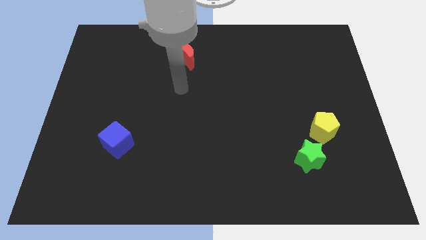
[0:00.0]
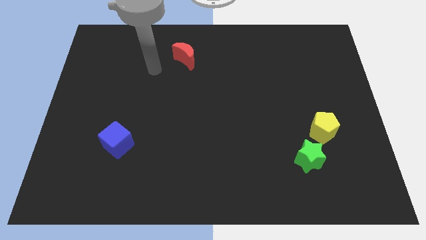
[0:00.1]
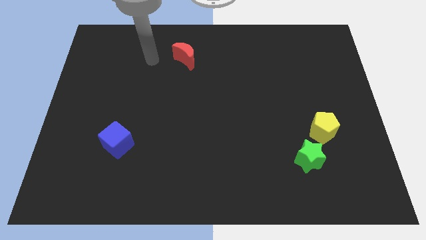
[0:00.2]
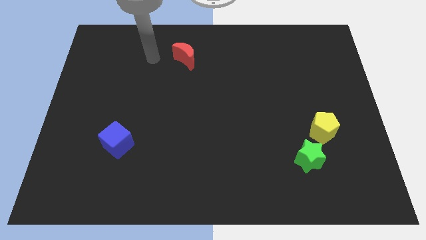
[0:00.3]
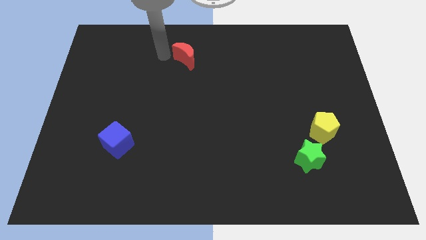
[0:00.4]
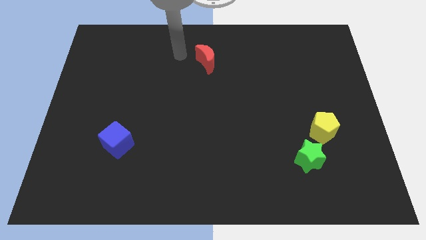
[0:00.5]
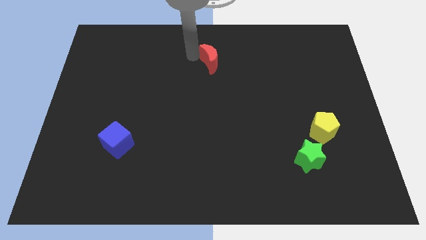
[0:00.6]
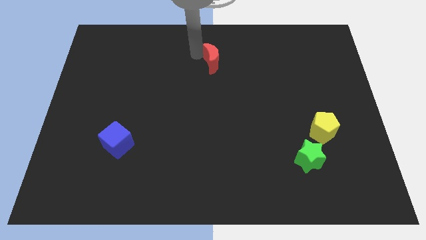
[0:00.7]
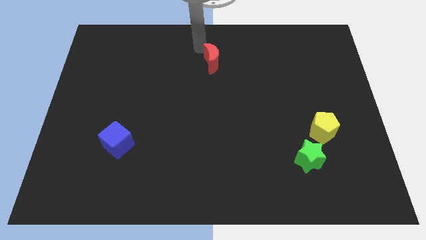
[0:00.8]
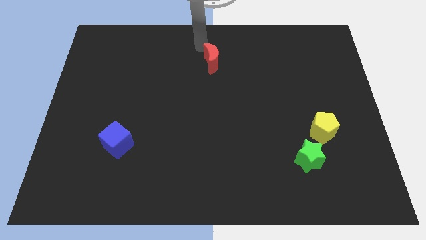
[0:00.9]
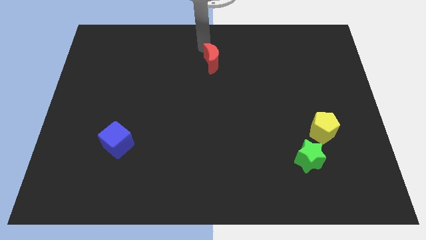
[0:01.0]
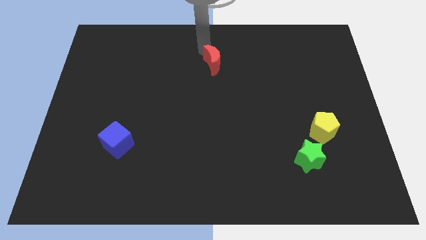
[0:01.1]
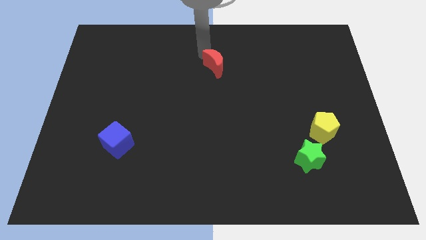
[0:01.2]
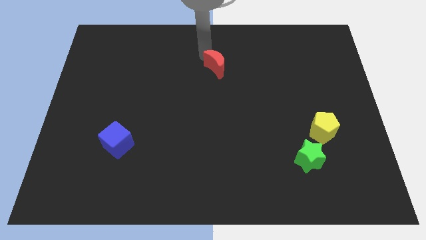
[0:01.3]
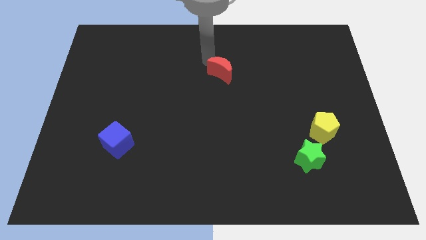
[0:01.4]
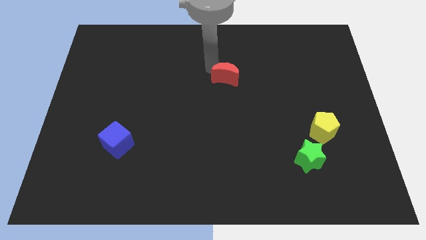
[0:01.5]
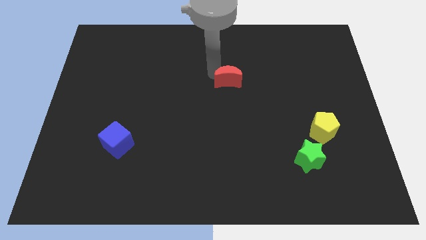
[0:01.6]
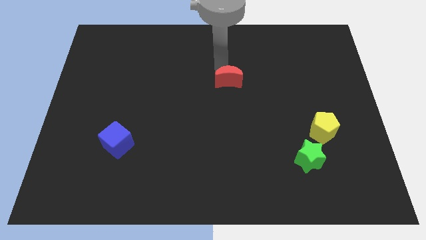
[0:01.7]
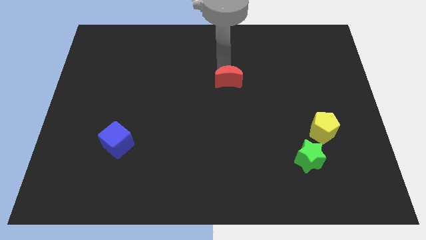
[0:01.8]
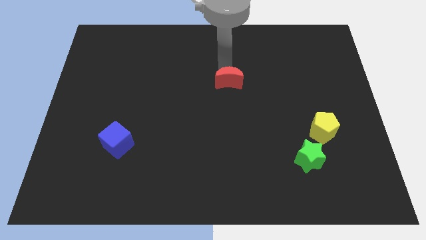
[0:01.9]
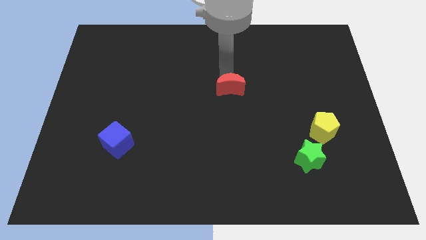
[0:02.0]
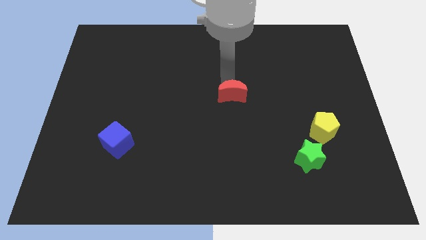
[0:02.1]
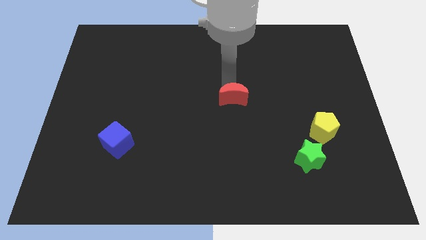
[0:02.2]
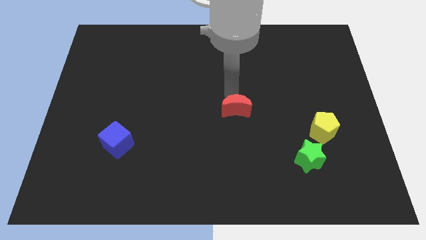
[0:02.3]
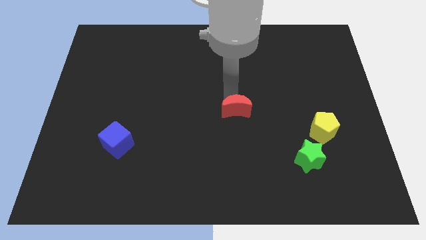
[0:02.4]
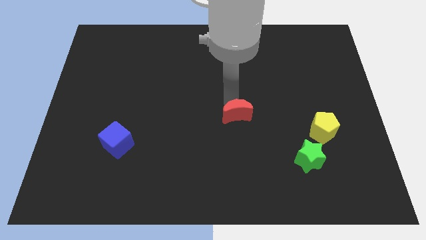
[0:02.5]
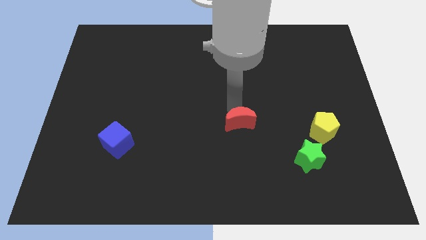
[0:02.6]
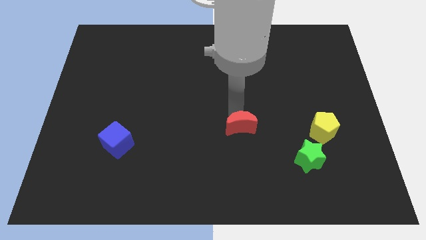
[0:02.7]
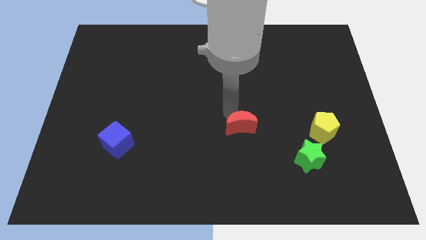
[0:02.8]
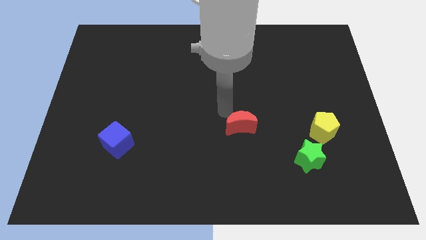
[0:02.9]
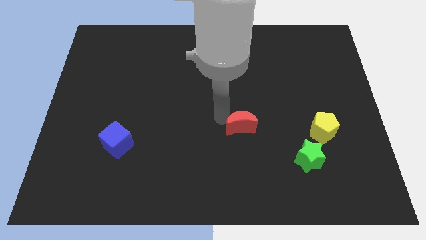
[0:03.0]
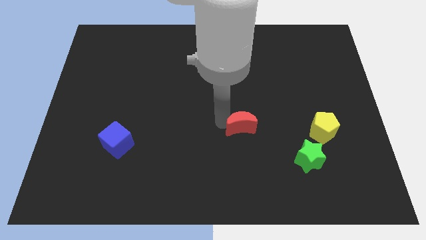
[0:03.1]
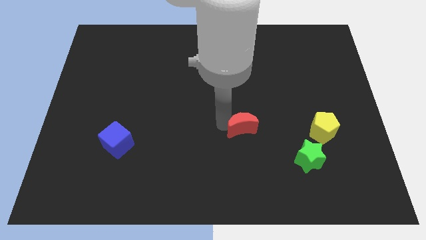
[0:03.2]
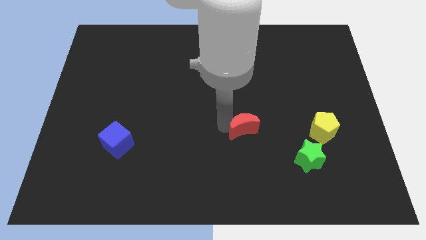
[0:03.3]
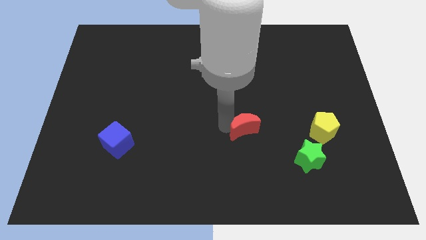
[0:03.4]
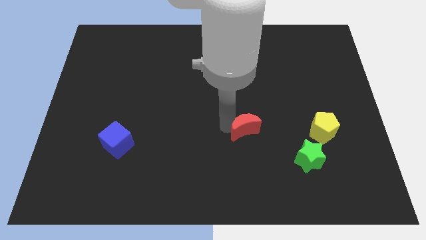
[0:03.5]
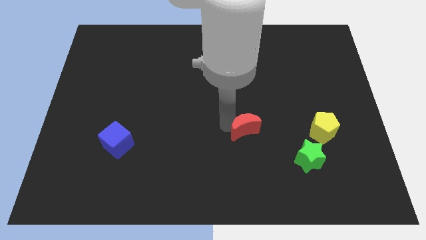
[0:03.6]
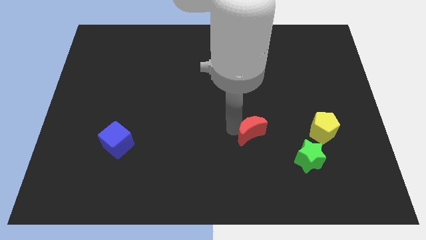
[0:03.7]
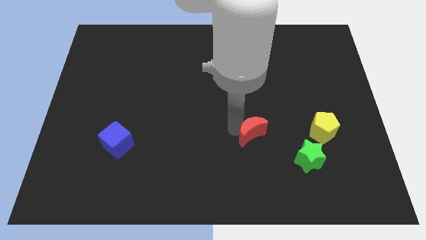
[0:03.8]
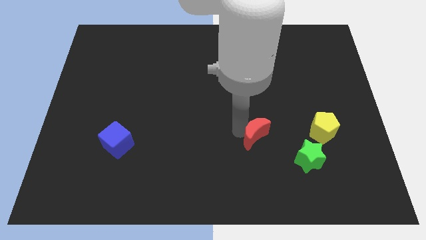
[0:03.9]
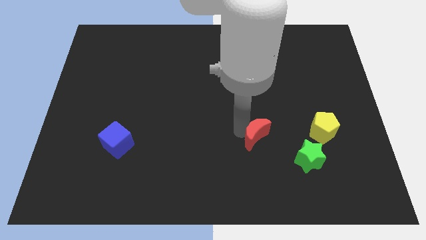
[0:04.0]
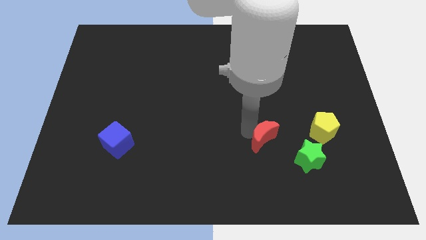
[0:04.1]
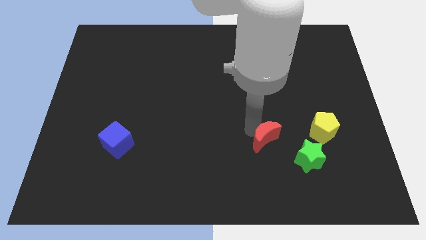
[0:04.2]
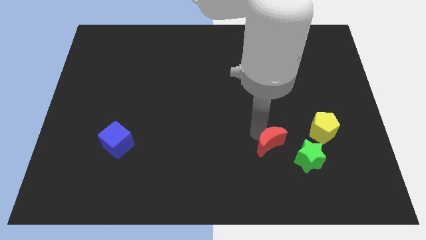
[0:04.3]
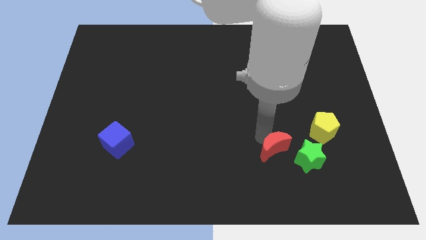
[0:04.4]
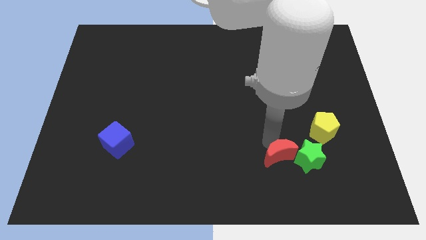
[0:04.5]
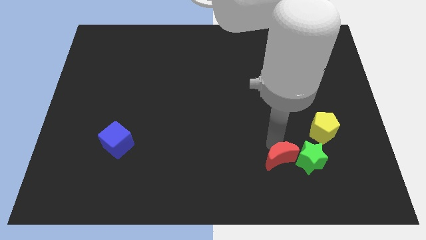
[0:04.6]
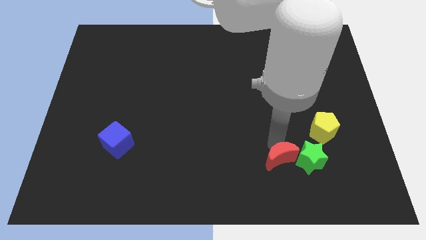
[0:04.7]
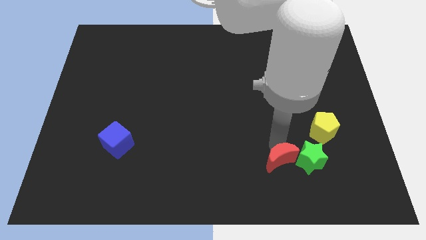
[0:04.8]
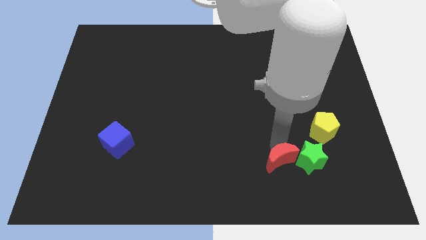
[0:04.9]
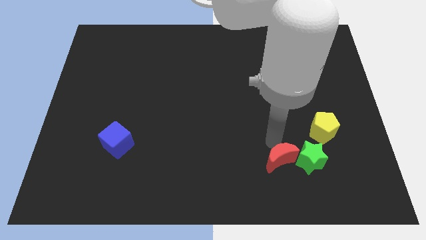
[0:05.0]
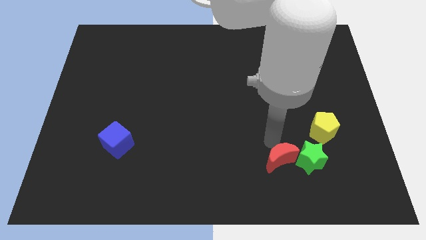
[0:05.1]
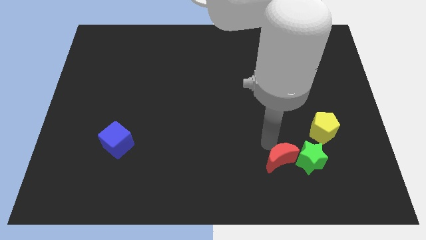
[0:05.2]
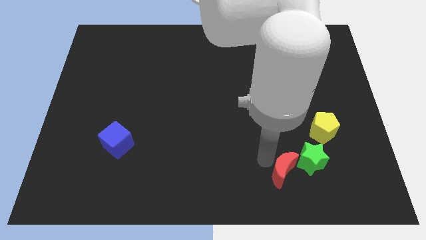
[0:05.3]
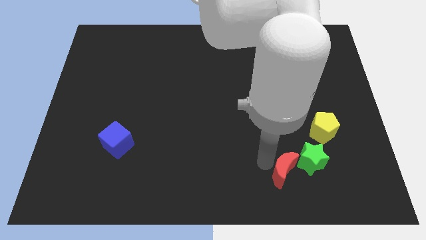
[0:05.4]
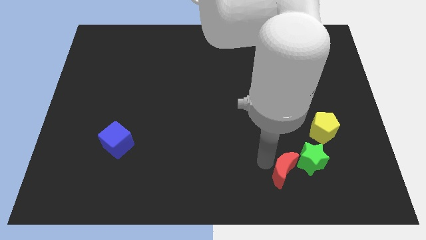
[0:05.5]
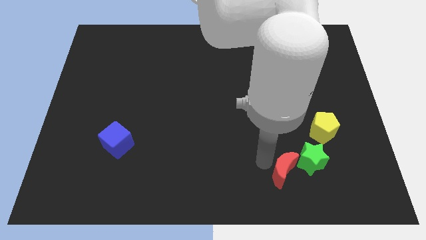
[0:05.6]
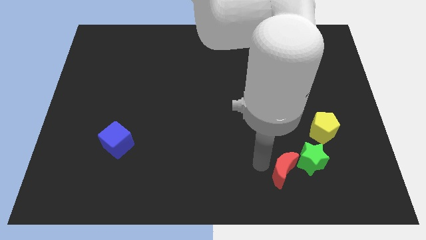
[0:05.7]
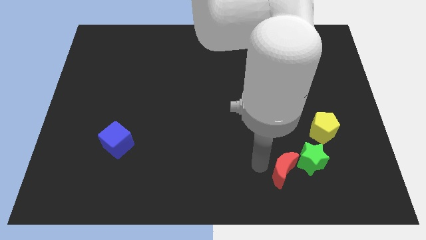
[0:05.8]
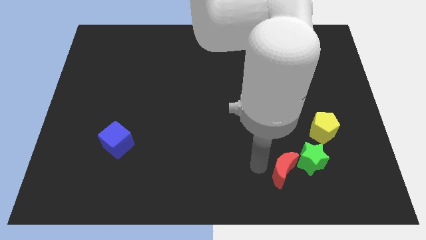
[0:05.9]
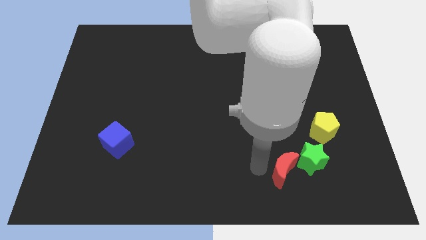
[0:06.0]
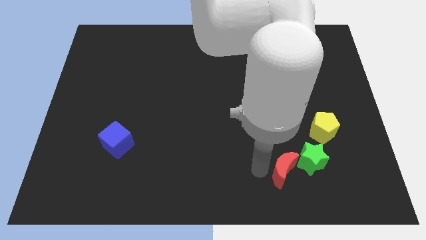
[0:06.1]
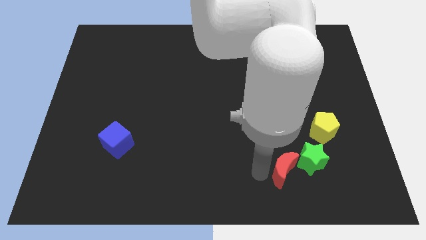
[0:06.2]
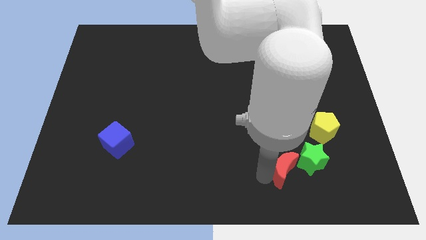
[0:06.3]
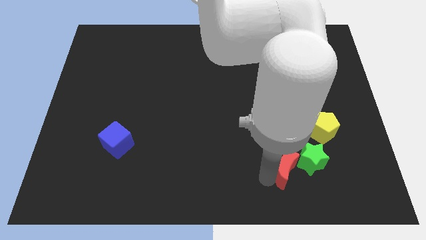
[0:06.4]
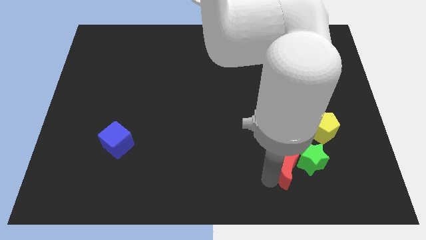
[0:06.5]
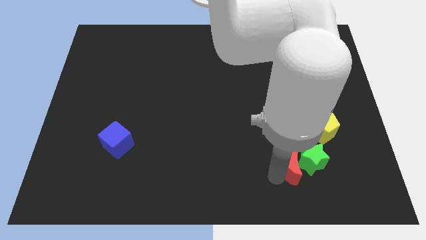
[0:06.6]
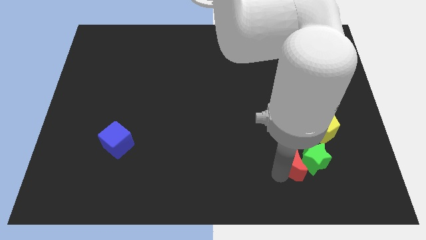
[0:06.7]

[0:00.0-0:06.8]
slide the red block close to the star

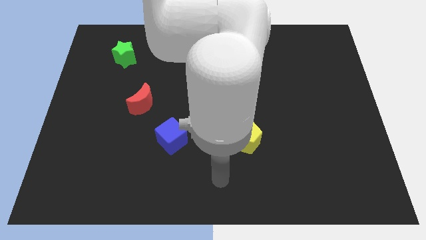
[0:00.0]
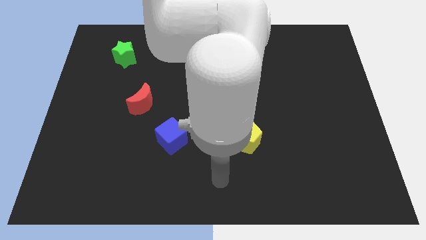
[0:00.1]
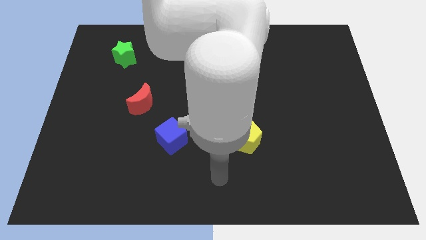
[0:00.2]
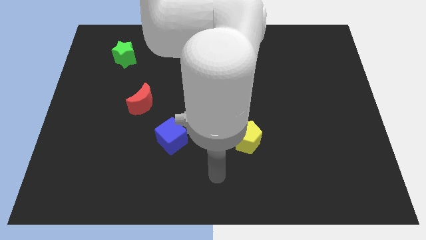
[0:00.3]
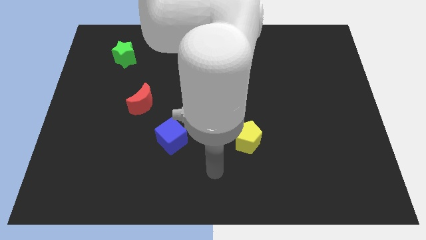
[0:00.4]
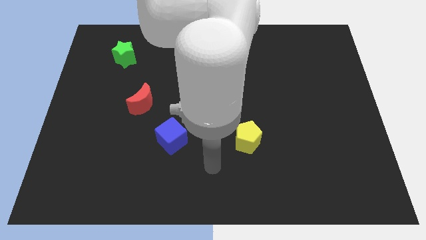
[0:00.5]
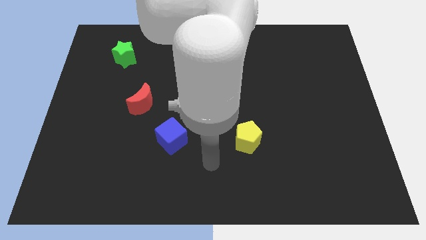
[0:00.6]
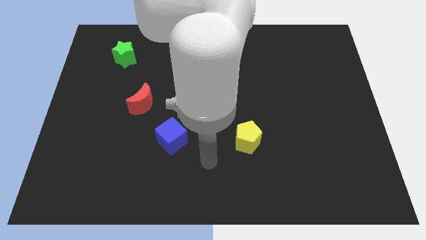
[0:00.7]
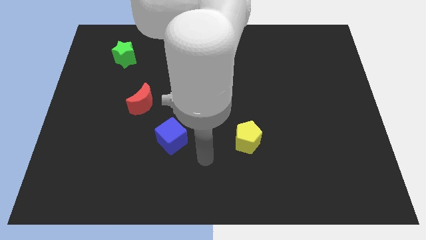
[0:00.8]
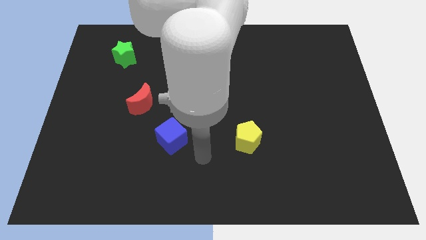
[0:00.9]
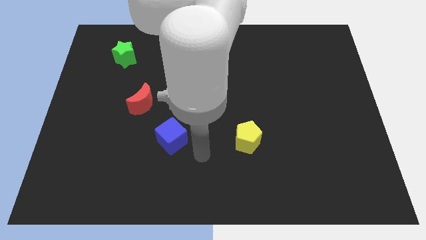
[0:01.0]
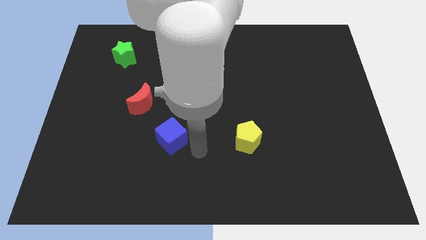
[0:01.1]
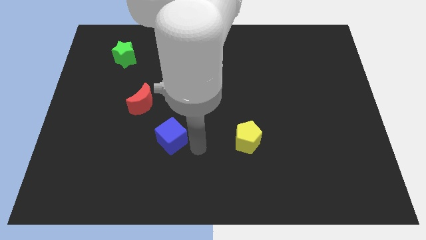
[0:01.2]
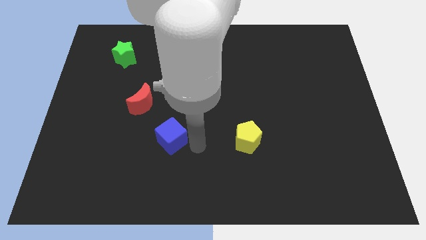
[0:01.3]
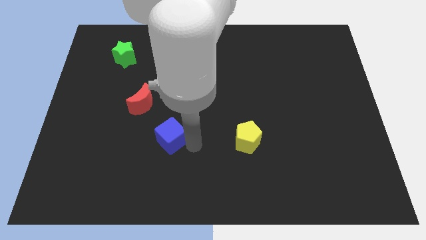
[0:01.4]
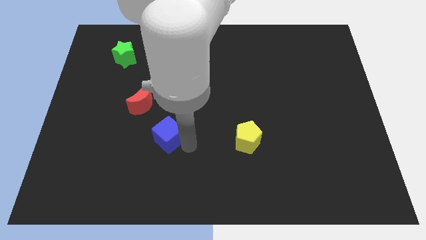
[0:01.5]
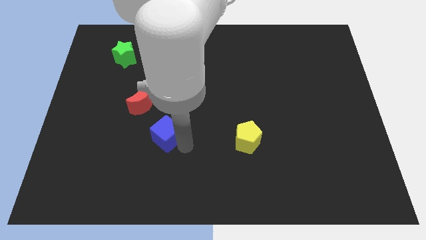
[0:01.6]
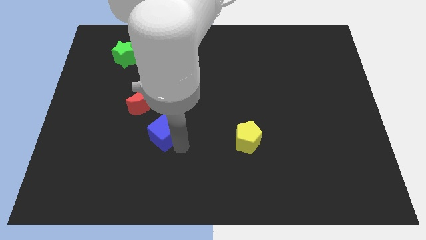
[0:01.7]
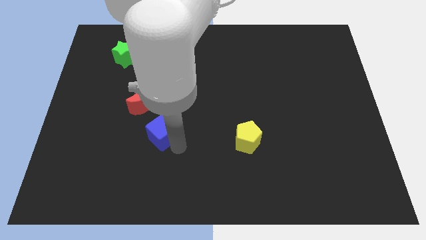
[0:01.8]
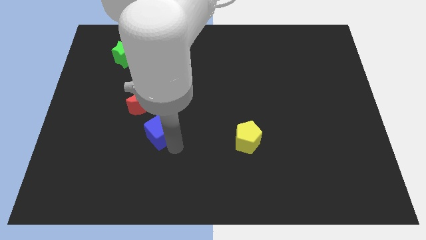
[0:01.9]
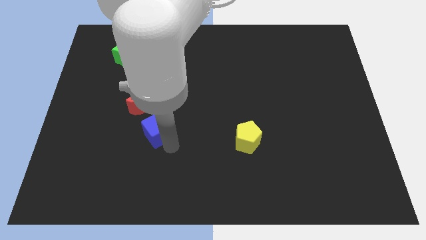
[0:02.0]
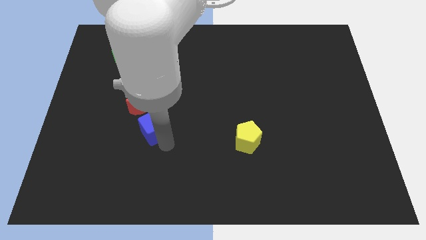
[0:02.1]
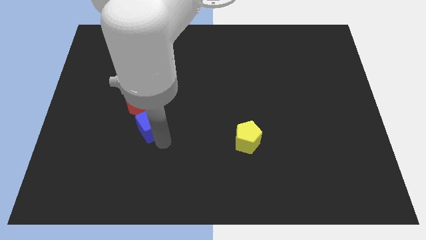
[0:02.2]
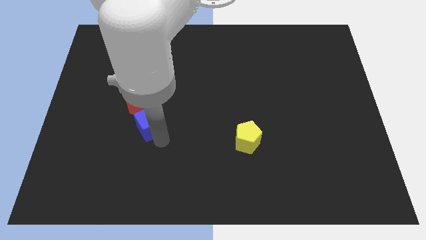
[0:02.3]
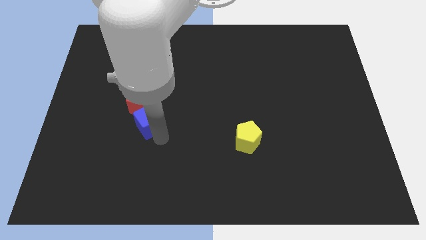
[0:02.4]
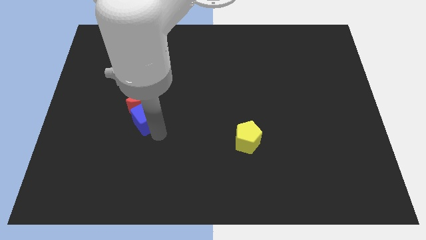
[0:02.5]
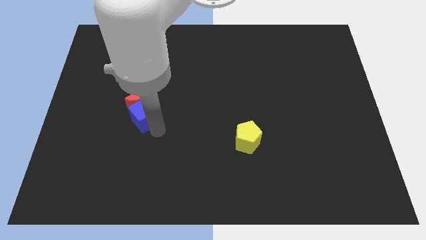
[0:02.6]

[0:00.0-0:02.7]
push the blue cube next to the red block
